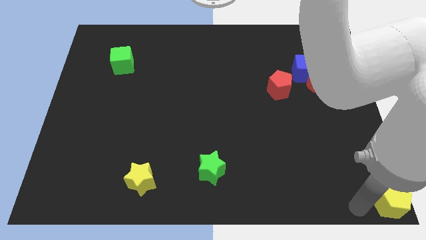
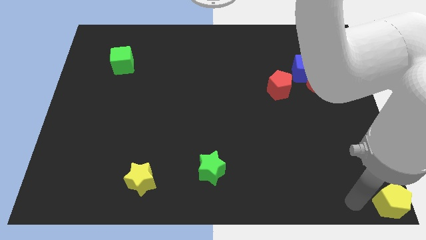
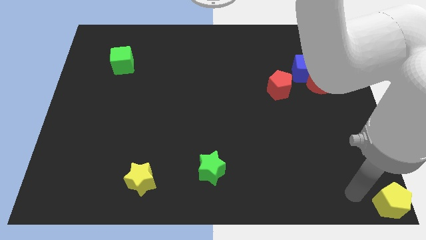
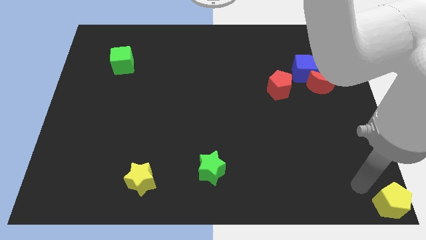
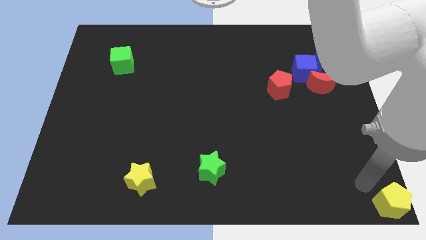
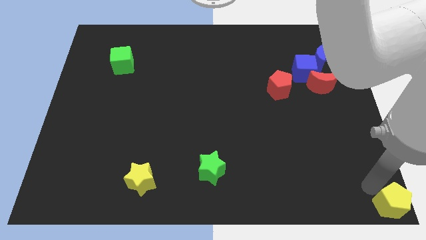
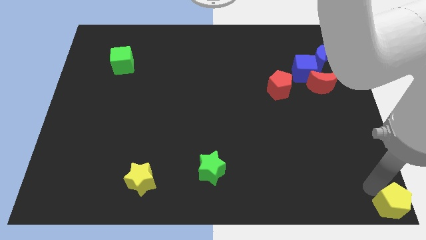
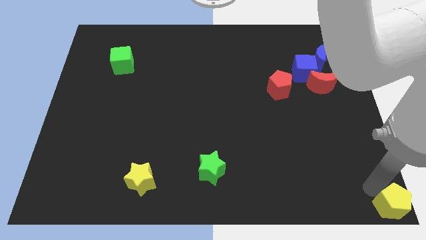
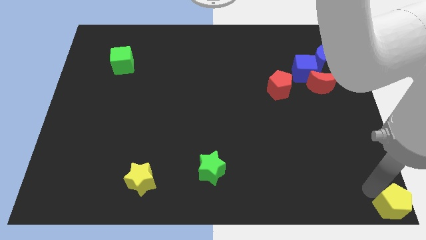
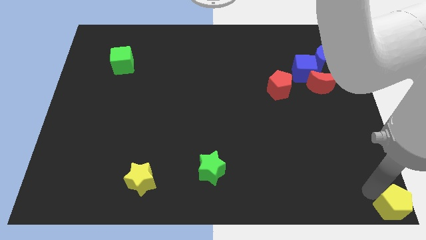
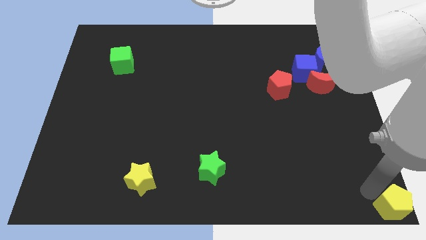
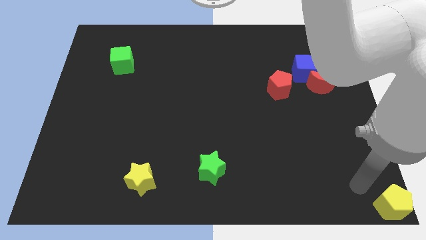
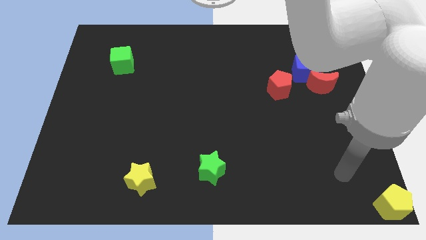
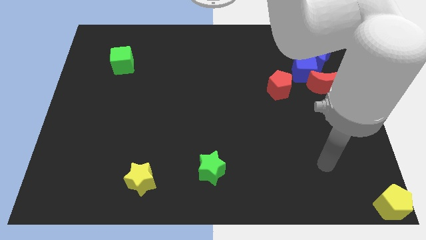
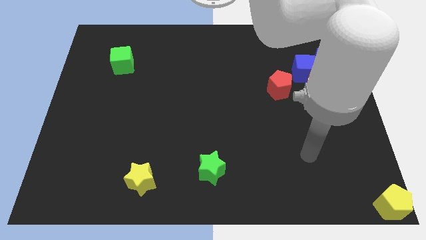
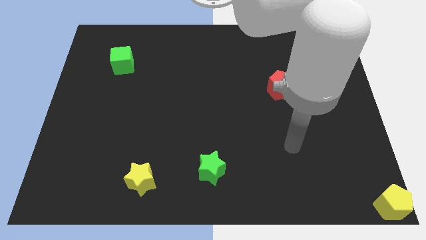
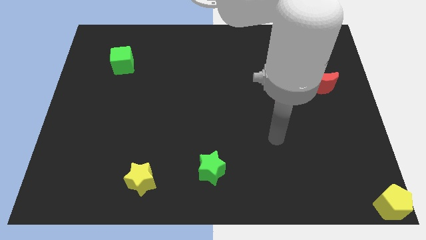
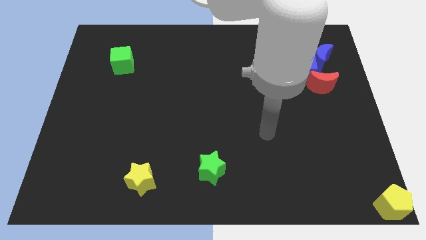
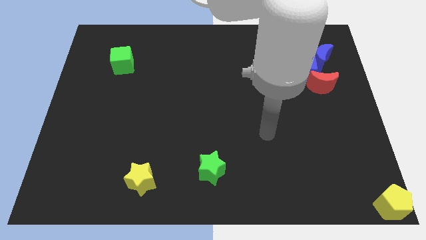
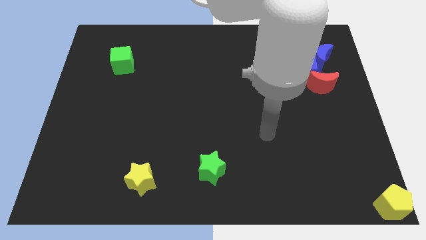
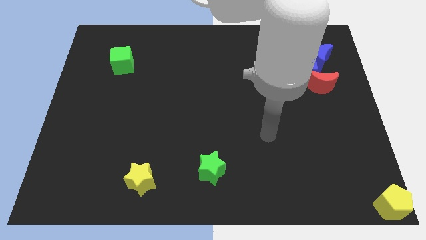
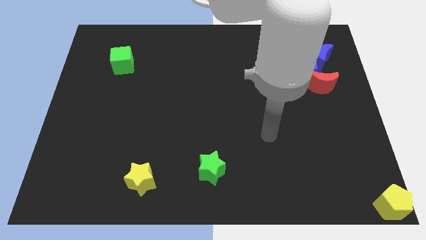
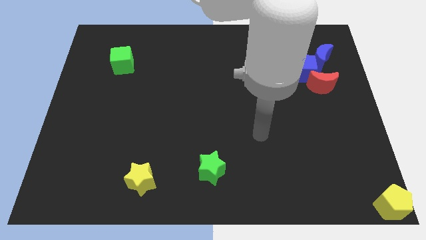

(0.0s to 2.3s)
go away from the yellow pentagon

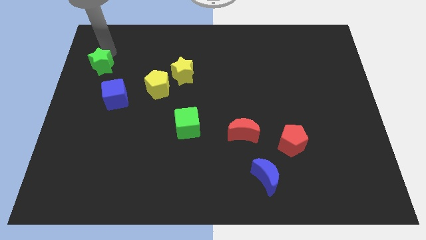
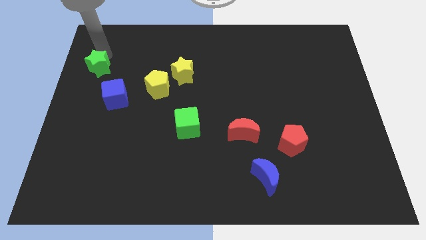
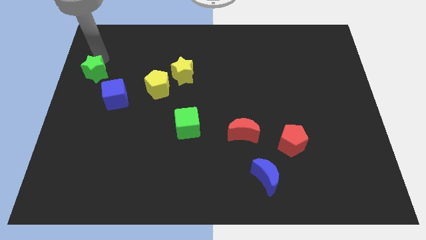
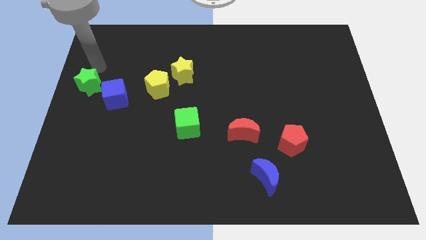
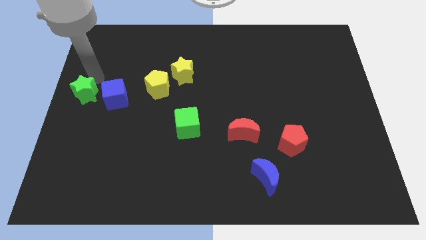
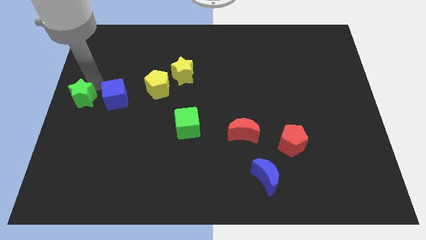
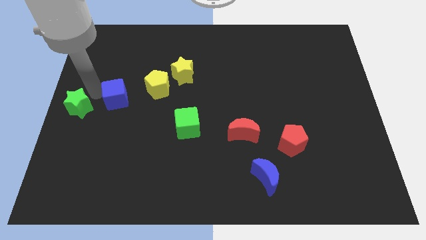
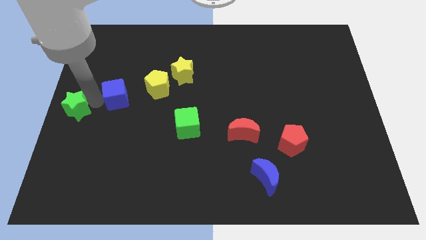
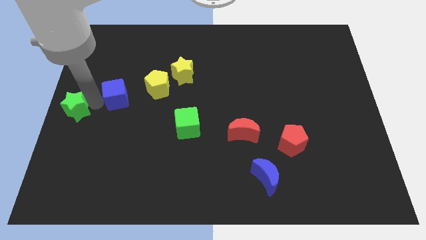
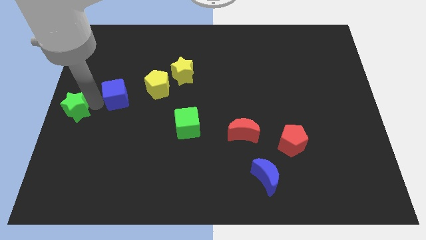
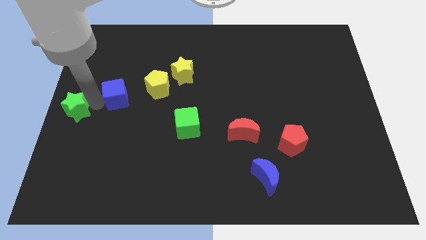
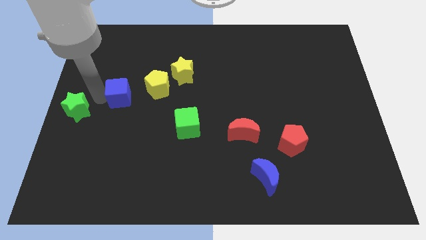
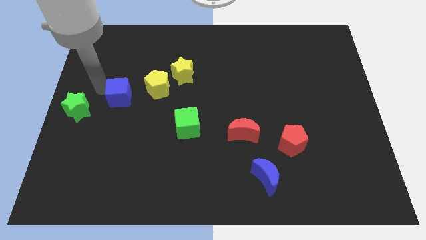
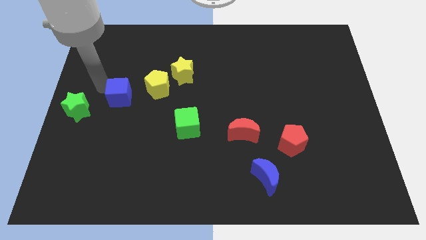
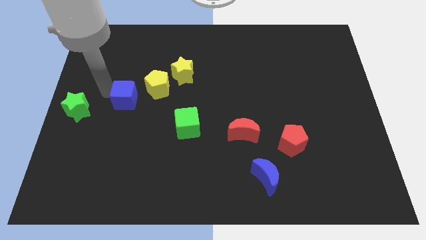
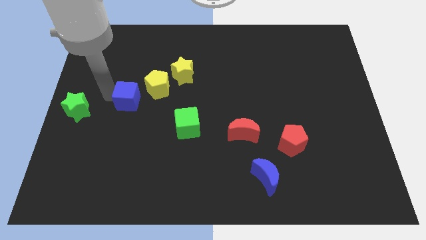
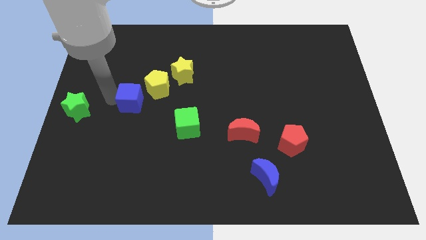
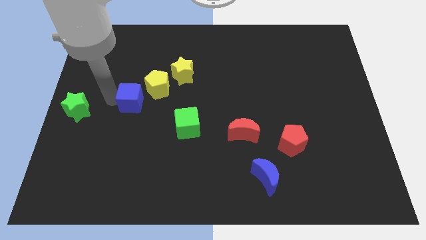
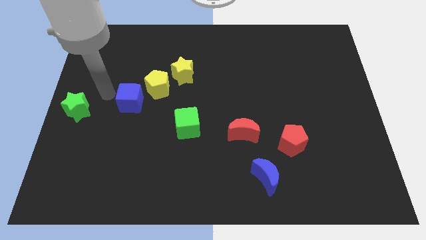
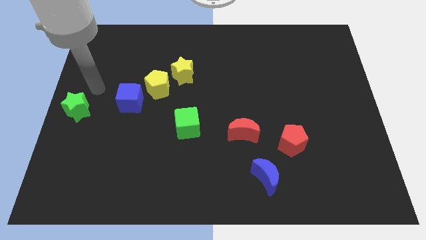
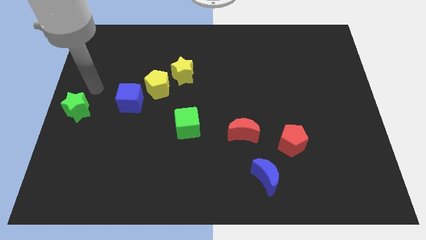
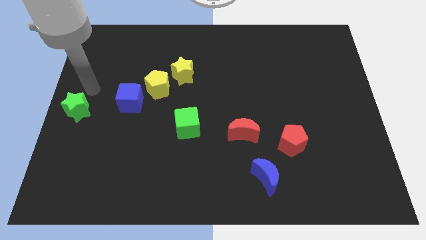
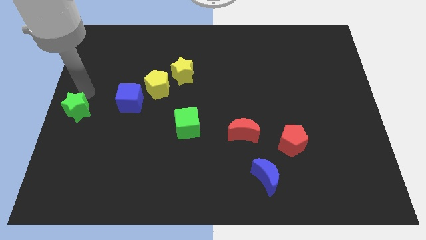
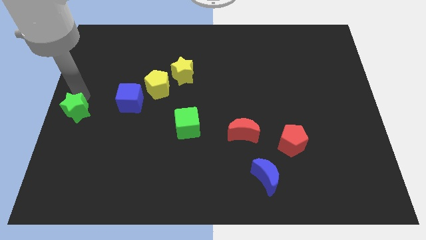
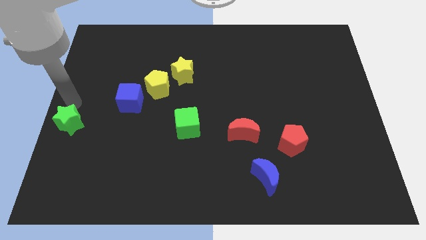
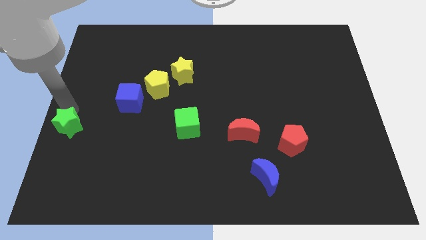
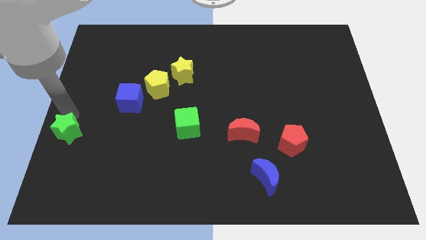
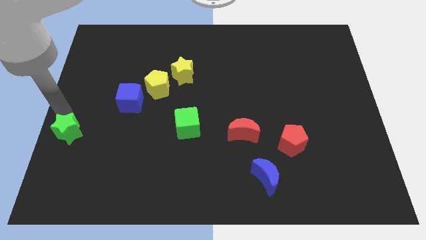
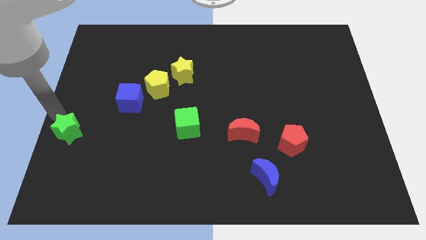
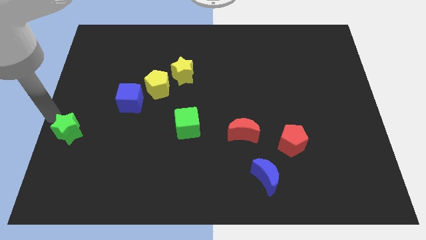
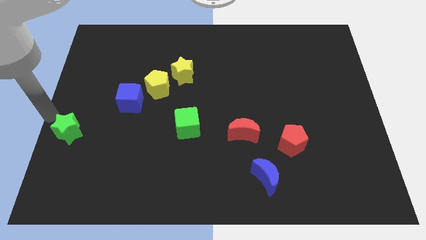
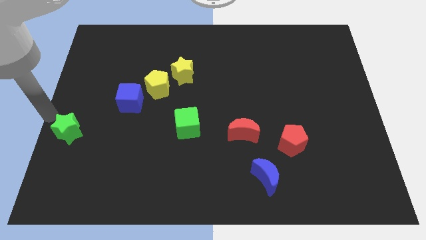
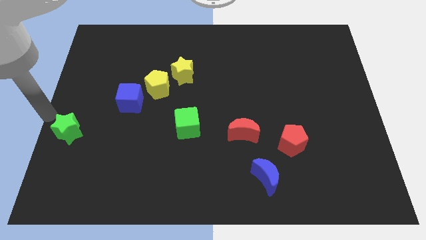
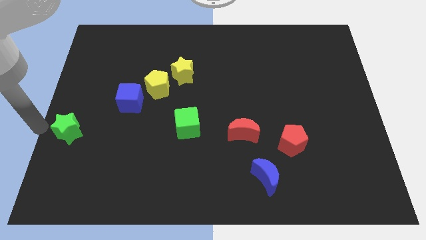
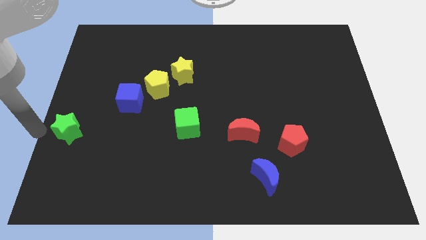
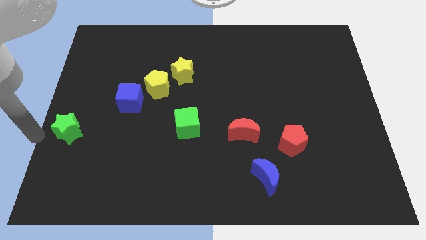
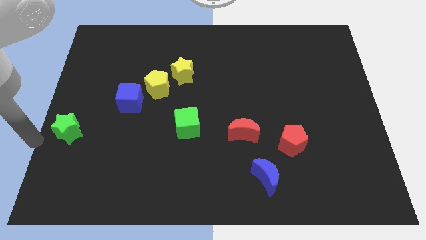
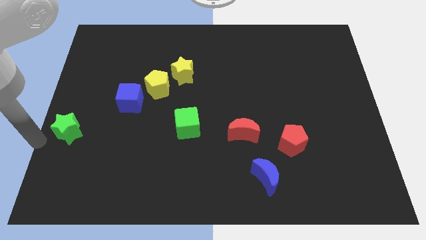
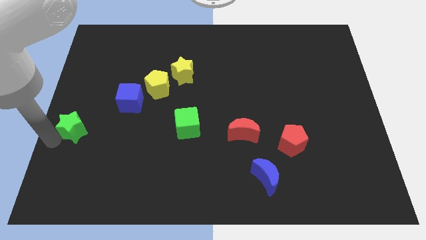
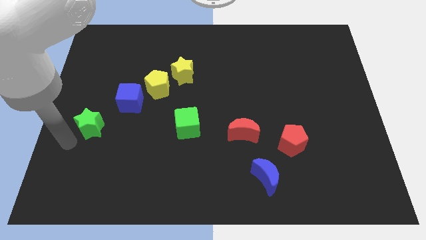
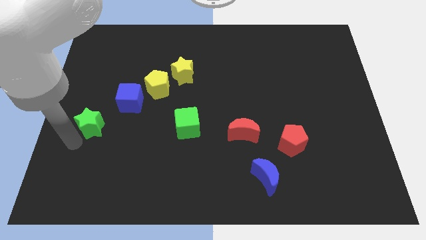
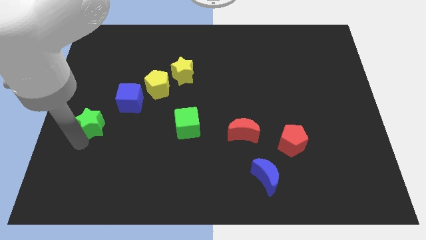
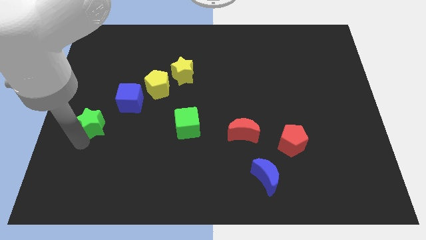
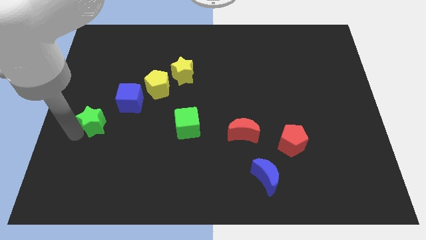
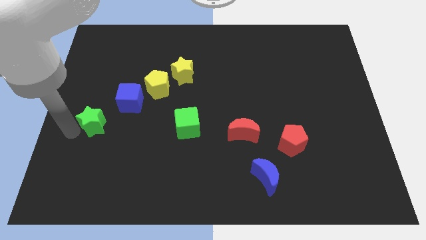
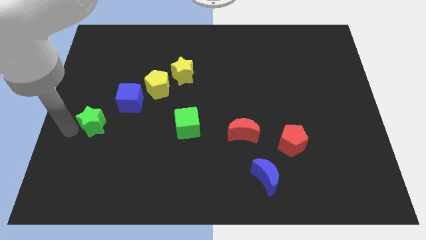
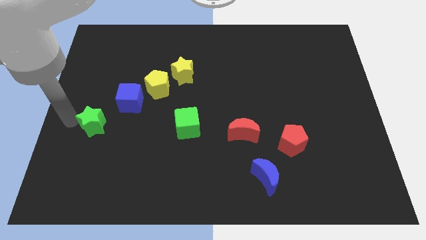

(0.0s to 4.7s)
place the green star parallel to the green cube

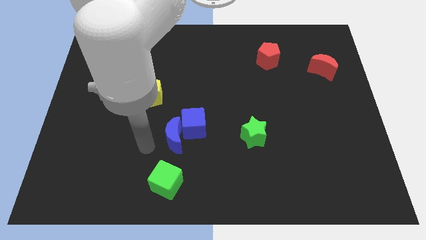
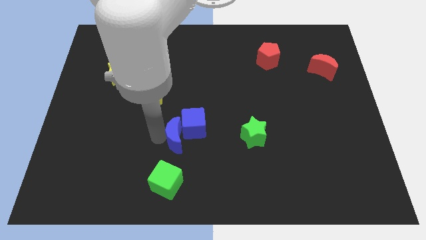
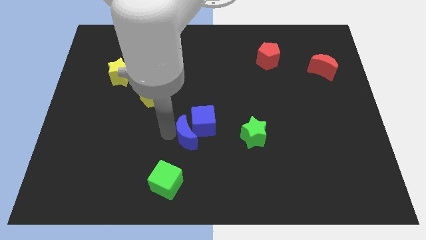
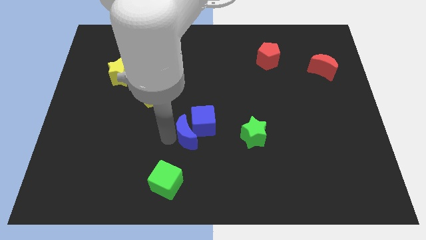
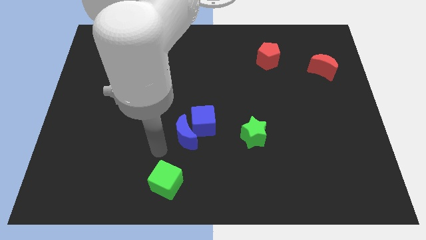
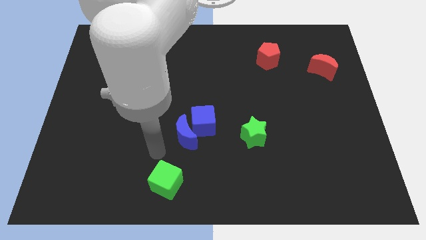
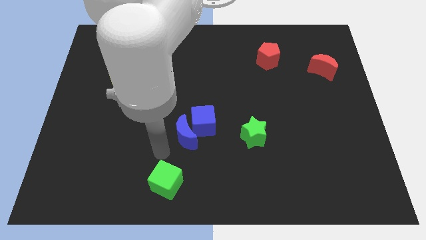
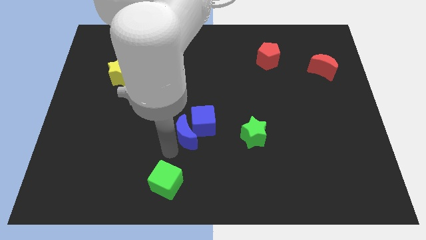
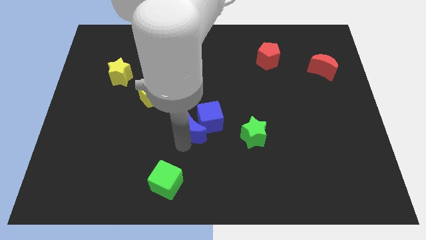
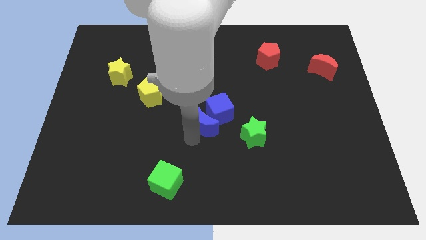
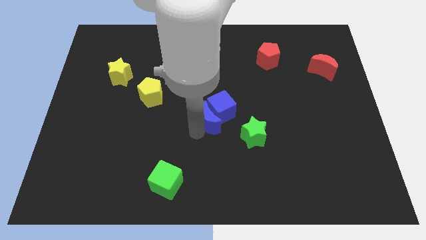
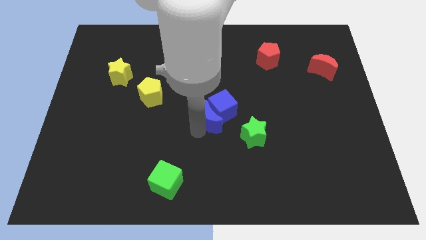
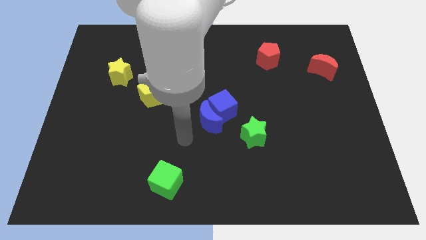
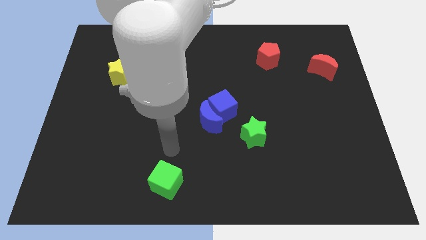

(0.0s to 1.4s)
push the blue cube with the help of blue crescent towards the center of the board

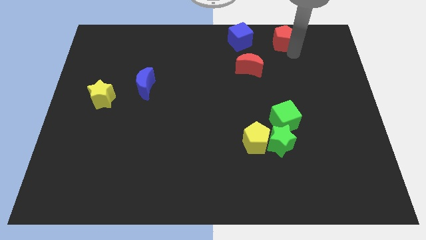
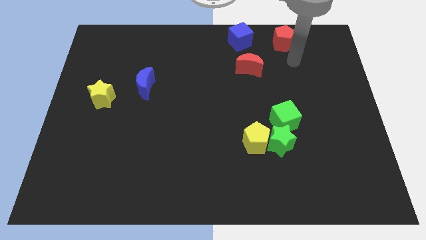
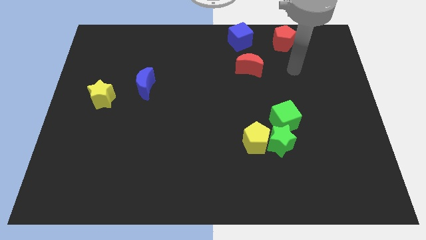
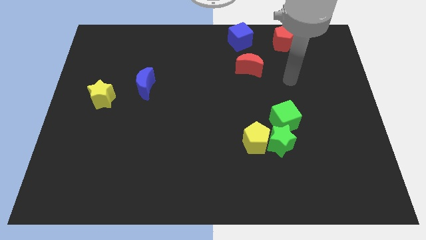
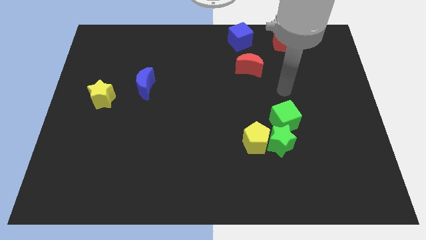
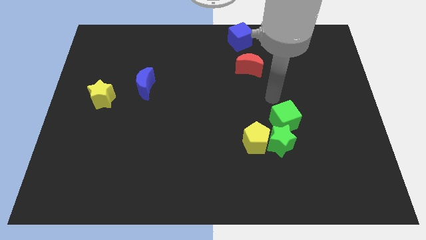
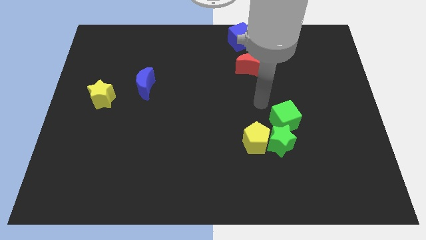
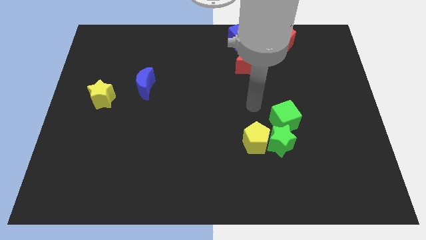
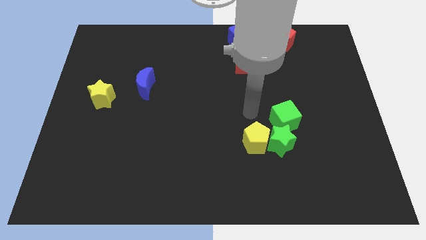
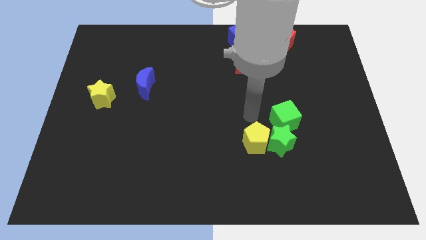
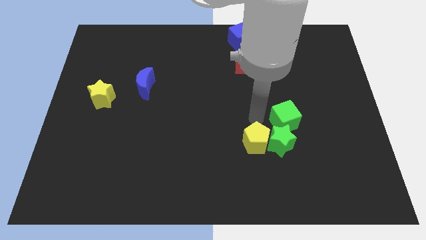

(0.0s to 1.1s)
point your arm at the top of yellow pentagon
